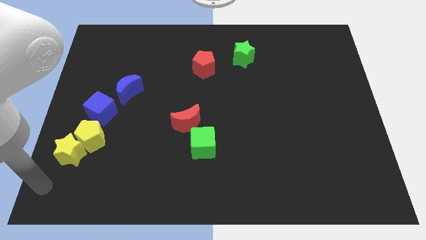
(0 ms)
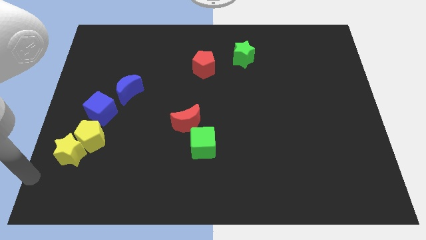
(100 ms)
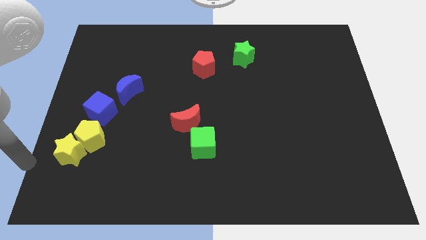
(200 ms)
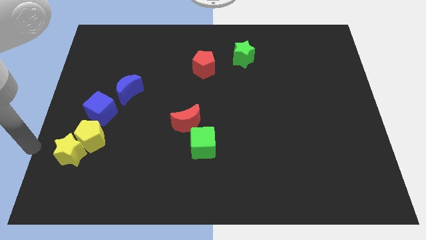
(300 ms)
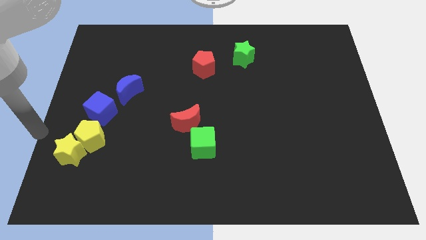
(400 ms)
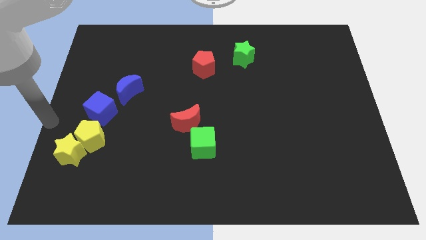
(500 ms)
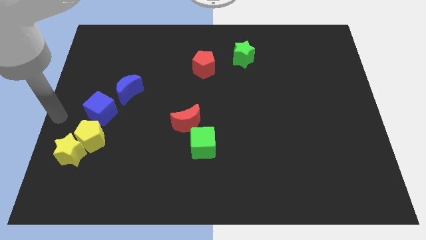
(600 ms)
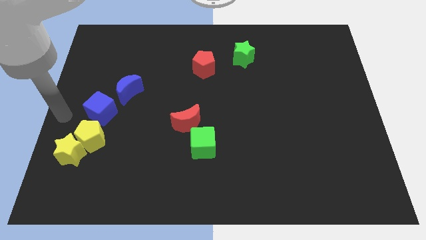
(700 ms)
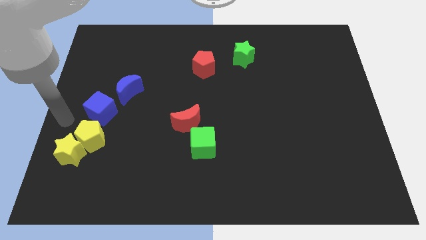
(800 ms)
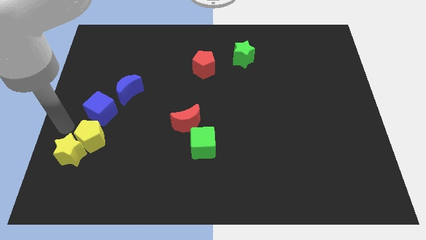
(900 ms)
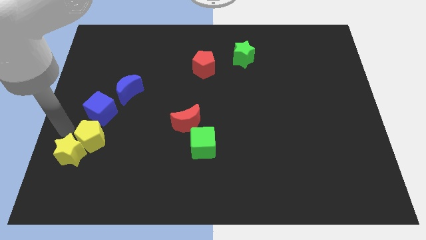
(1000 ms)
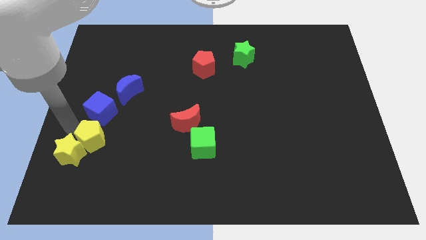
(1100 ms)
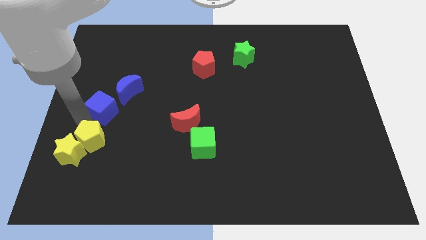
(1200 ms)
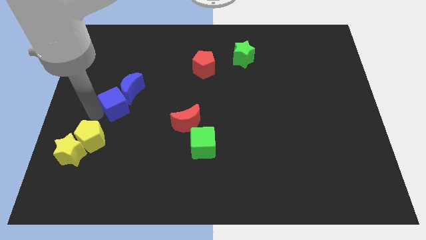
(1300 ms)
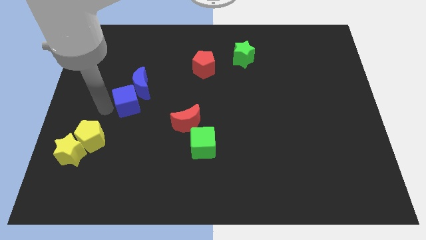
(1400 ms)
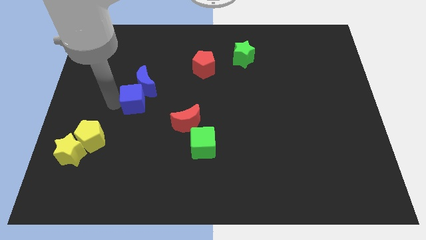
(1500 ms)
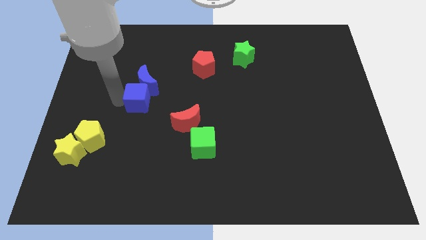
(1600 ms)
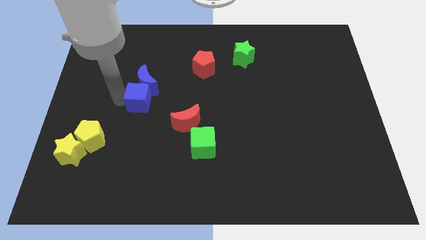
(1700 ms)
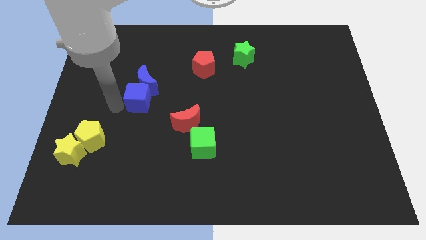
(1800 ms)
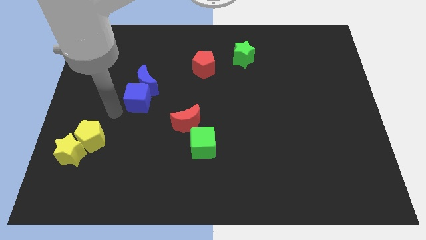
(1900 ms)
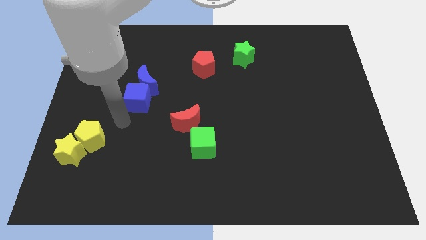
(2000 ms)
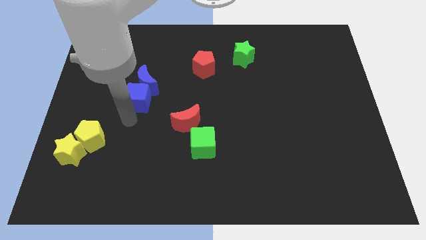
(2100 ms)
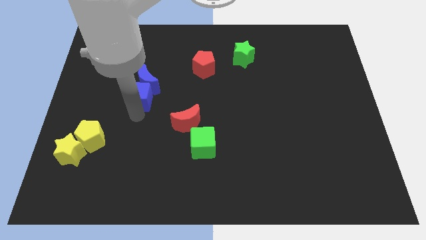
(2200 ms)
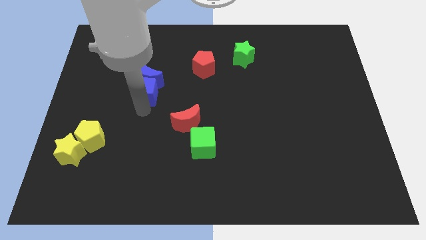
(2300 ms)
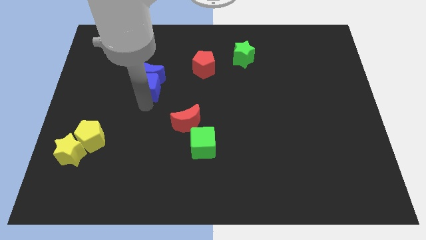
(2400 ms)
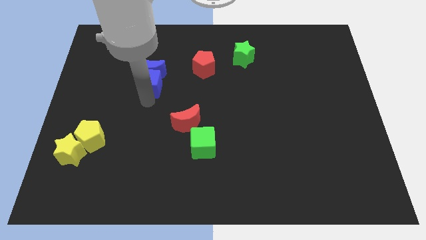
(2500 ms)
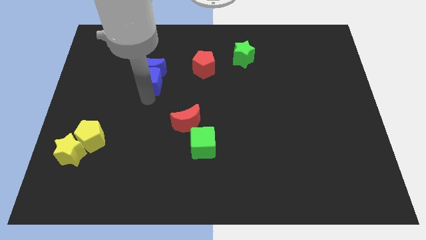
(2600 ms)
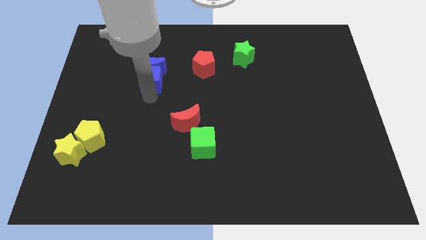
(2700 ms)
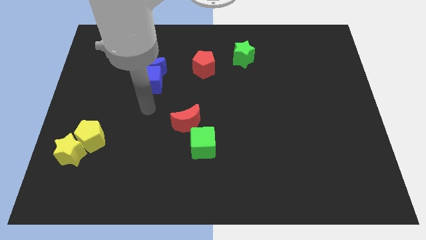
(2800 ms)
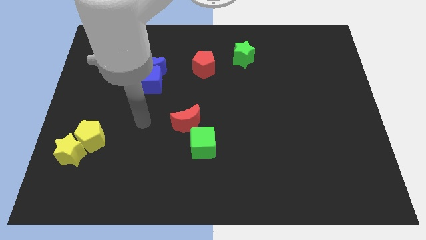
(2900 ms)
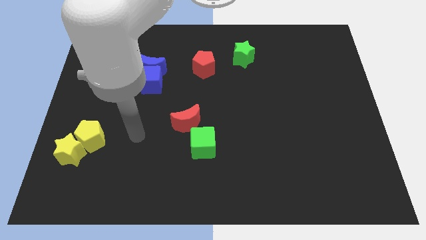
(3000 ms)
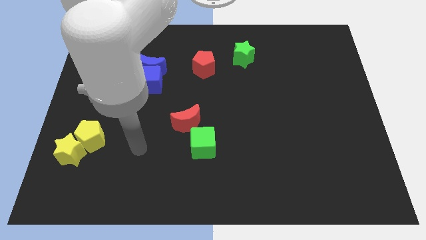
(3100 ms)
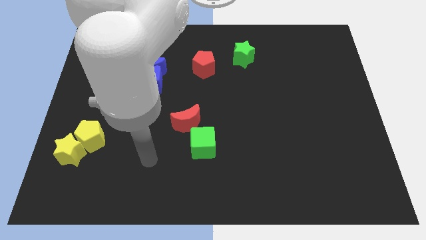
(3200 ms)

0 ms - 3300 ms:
push the blue crescent with blue cube to the top left of the board

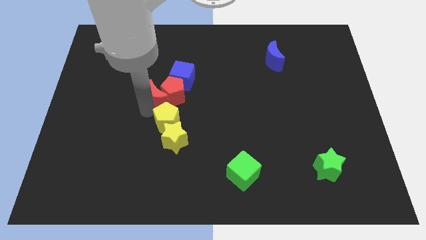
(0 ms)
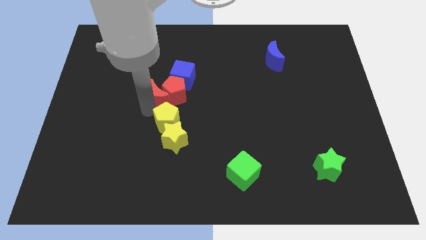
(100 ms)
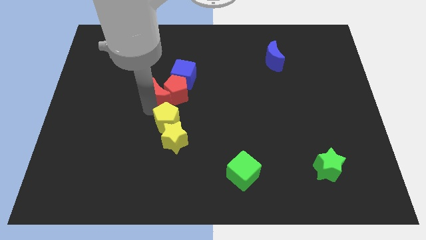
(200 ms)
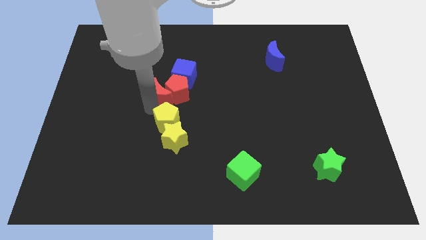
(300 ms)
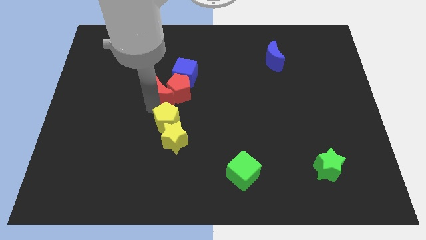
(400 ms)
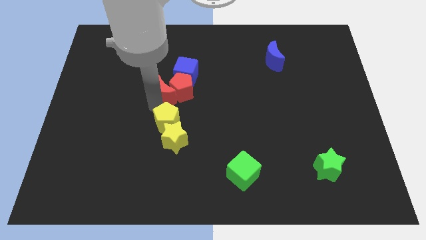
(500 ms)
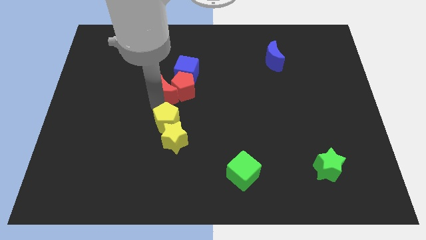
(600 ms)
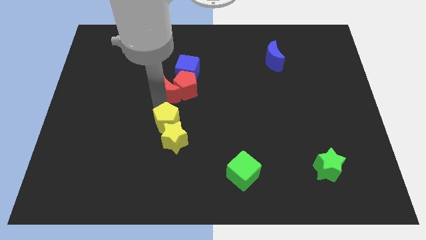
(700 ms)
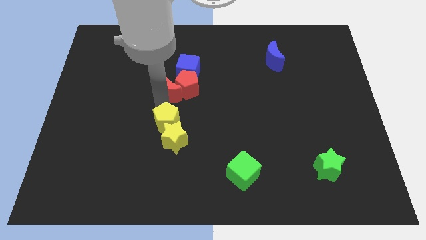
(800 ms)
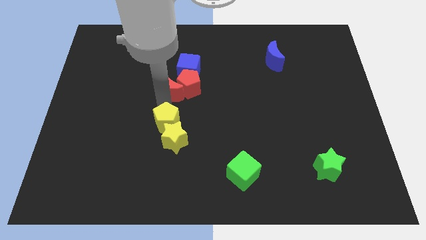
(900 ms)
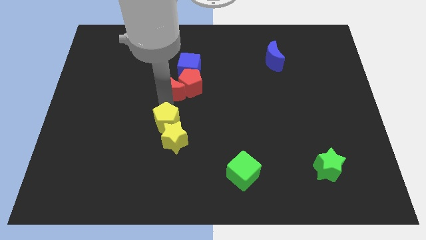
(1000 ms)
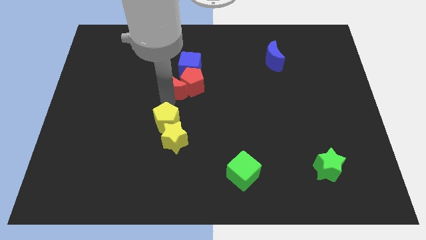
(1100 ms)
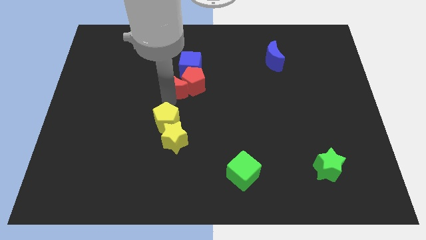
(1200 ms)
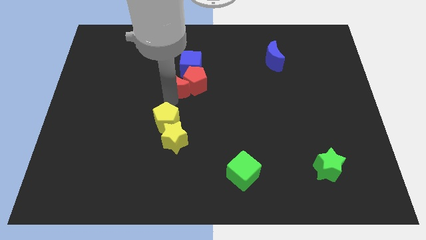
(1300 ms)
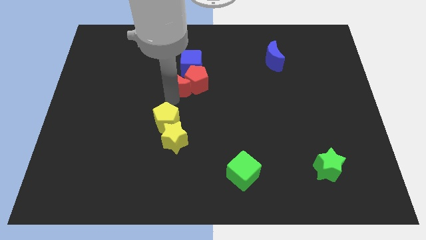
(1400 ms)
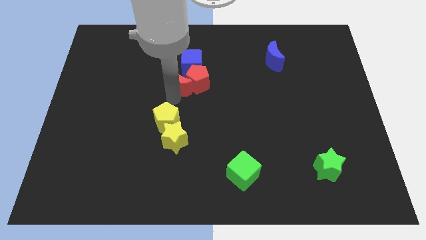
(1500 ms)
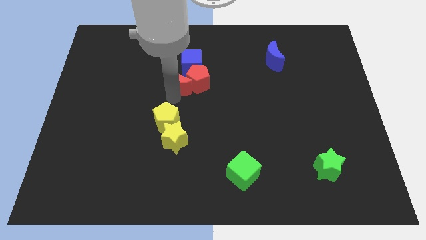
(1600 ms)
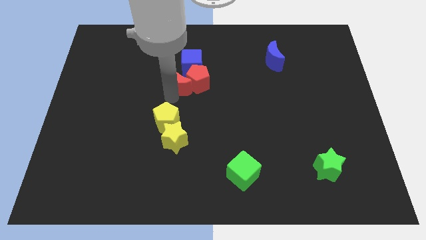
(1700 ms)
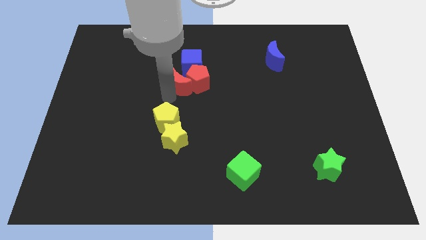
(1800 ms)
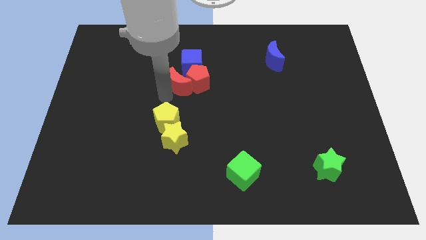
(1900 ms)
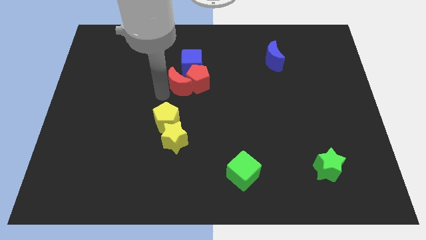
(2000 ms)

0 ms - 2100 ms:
push the red crescent towards the center of the board

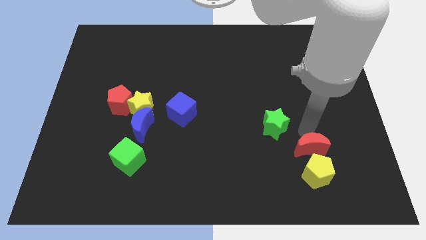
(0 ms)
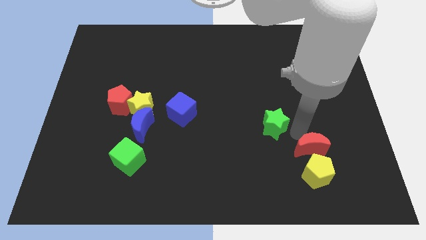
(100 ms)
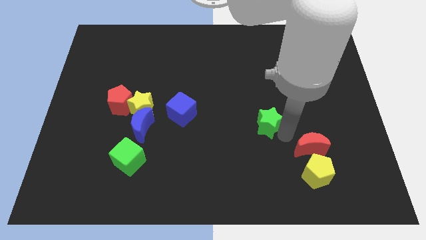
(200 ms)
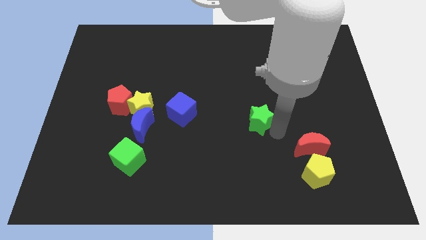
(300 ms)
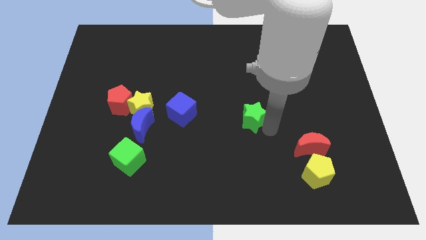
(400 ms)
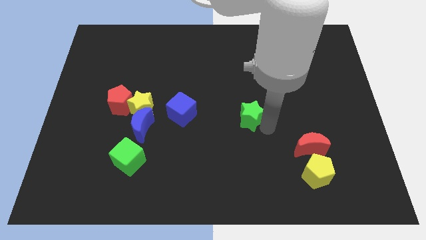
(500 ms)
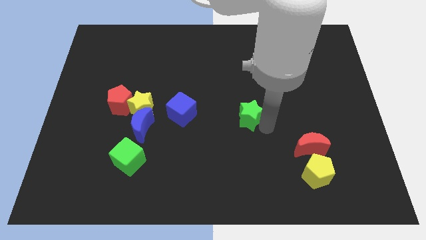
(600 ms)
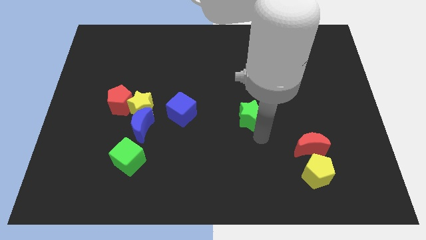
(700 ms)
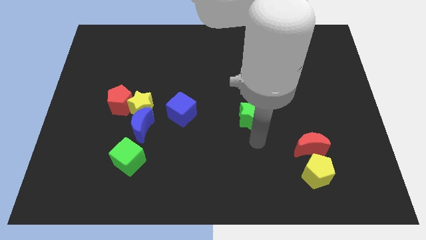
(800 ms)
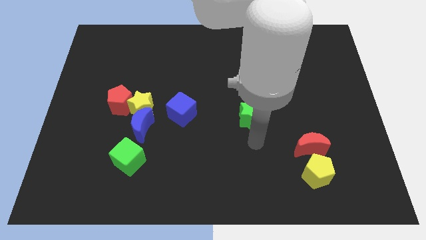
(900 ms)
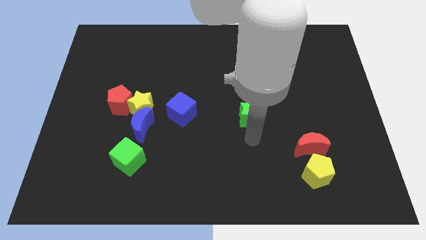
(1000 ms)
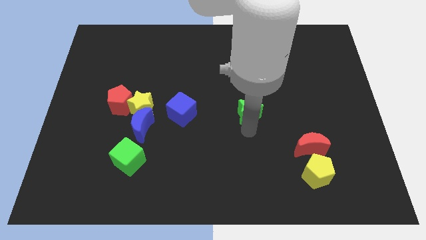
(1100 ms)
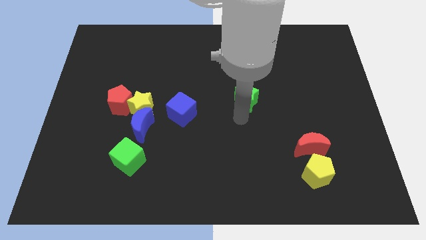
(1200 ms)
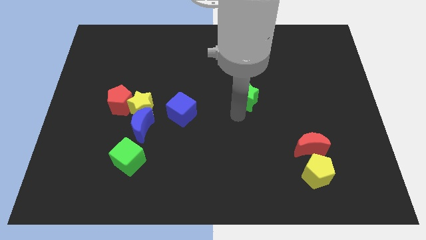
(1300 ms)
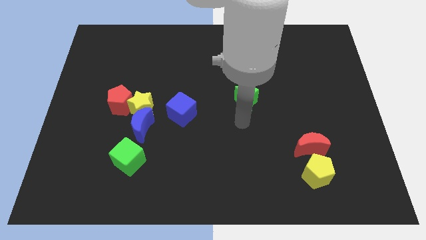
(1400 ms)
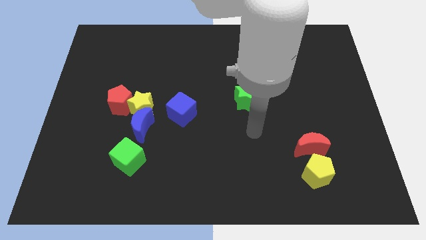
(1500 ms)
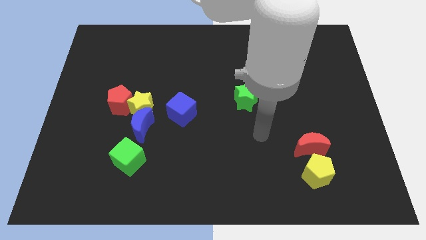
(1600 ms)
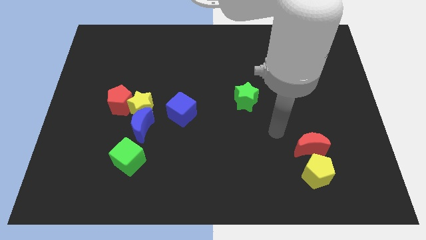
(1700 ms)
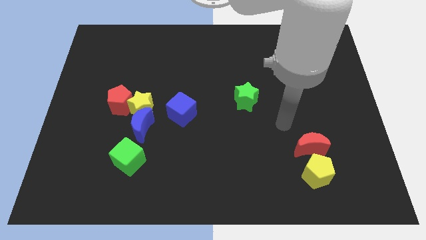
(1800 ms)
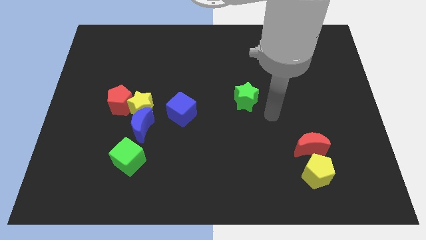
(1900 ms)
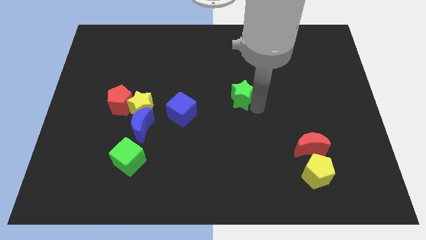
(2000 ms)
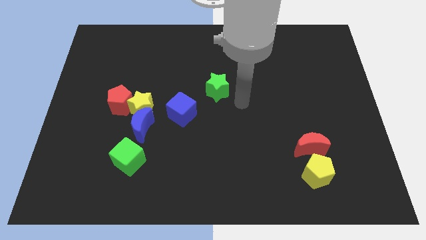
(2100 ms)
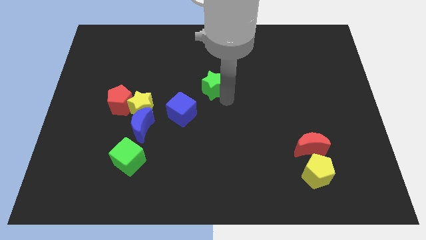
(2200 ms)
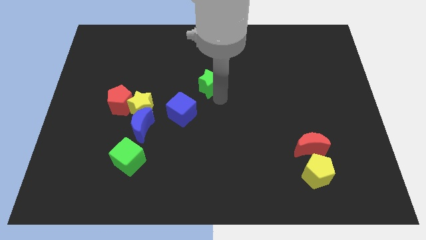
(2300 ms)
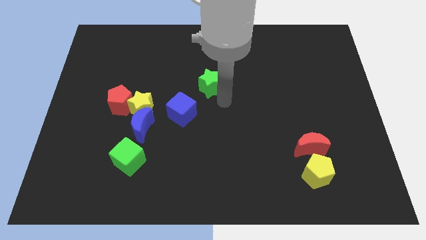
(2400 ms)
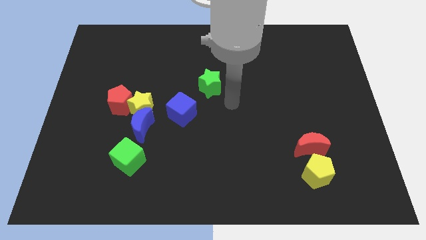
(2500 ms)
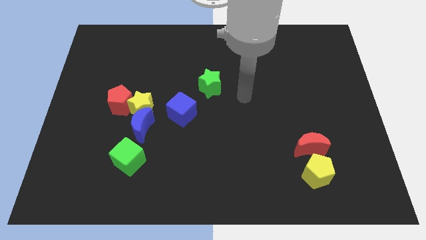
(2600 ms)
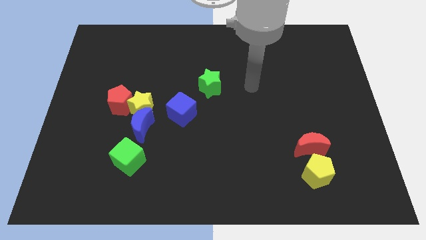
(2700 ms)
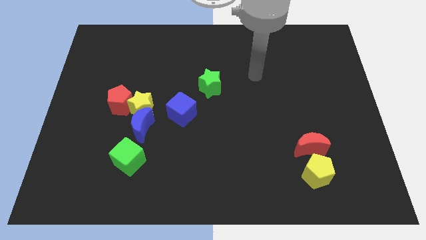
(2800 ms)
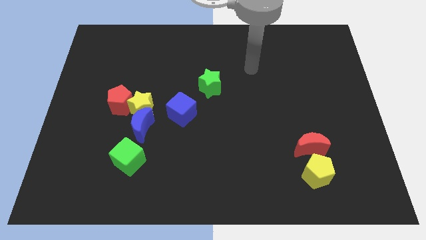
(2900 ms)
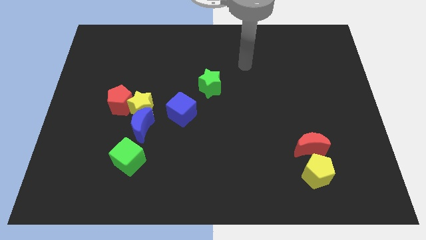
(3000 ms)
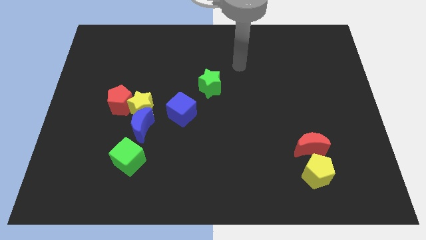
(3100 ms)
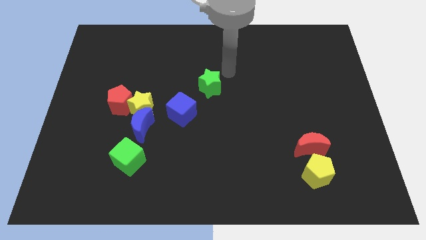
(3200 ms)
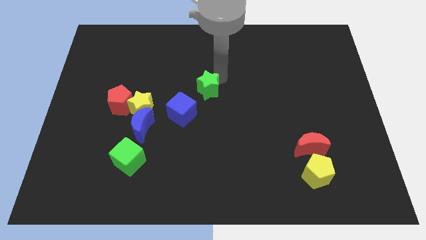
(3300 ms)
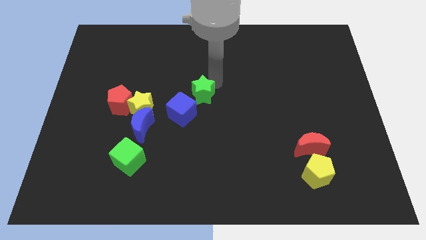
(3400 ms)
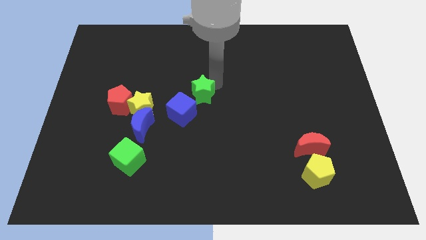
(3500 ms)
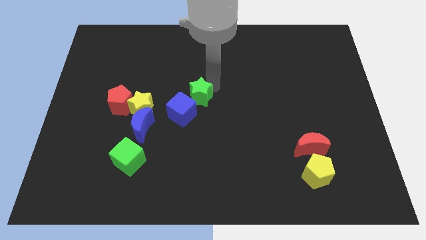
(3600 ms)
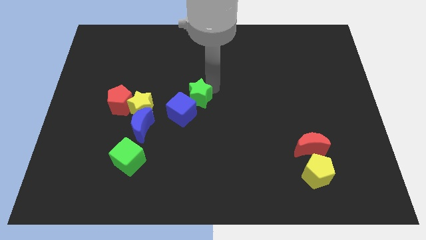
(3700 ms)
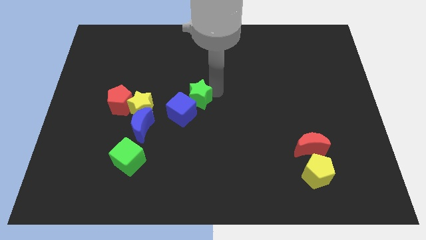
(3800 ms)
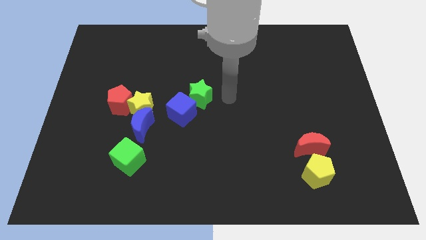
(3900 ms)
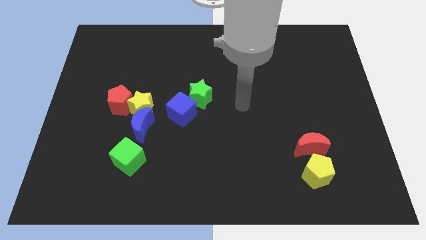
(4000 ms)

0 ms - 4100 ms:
place green star to the top right of the blue cube
